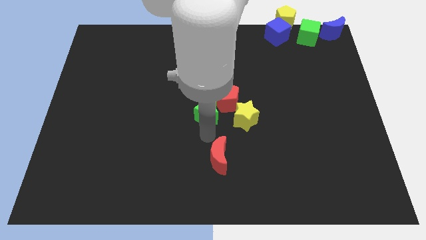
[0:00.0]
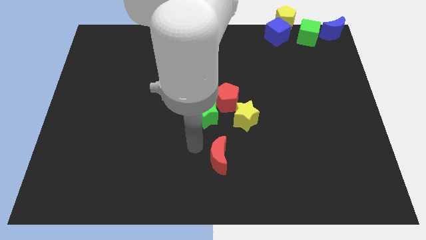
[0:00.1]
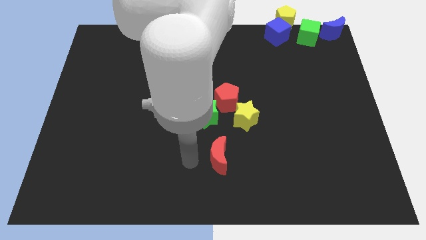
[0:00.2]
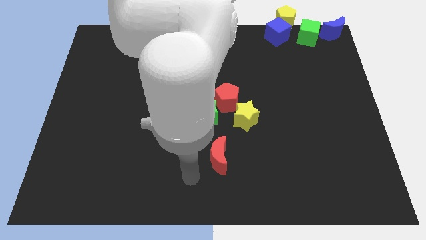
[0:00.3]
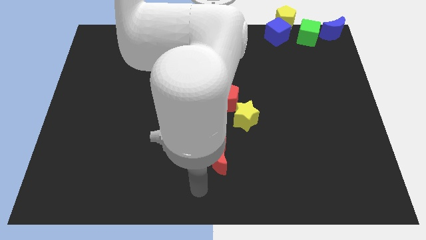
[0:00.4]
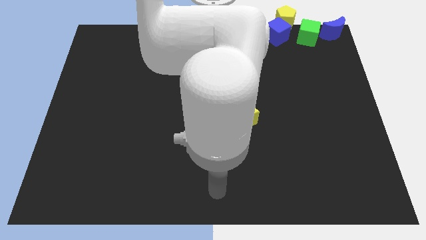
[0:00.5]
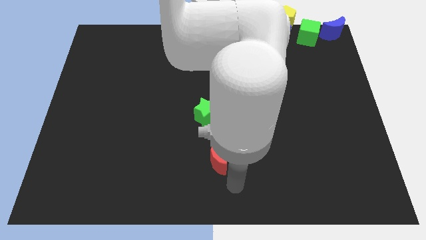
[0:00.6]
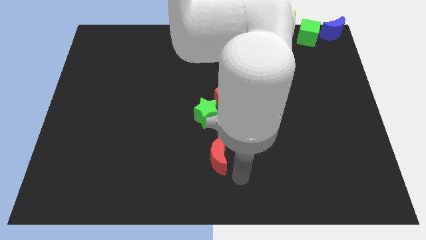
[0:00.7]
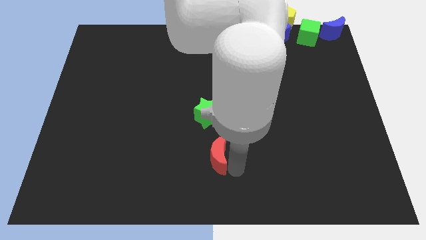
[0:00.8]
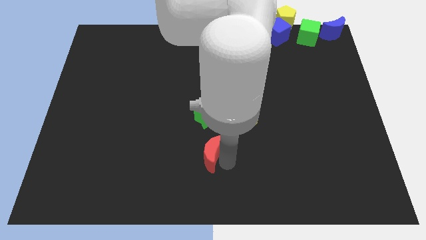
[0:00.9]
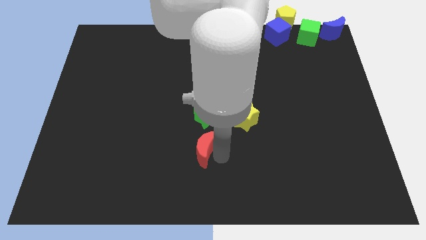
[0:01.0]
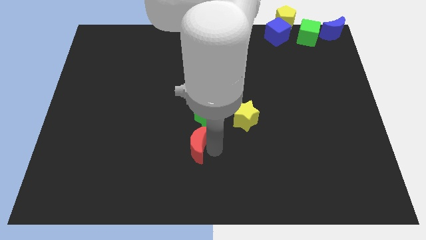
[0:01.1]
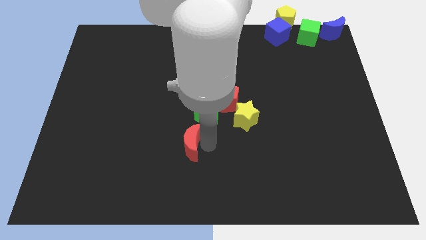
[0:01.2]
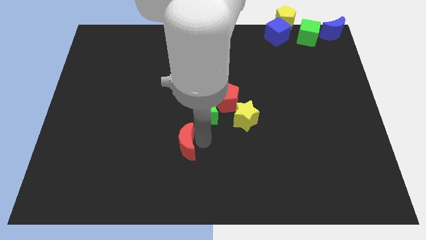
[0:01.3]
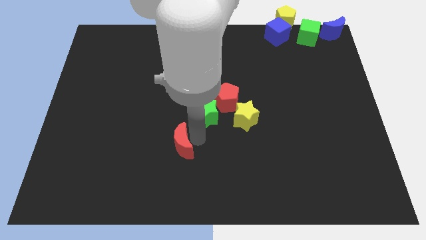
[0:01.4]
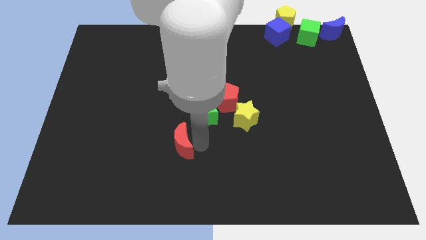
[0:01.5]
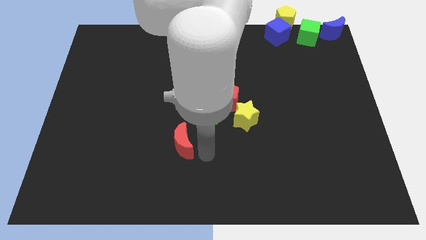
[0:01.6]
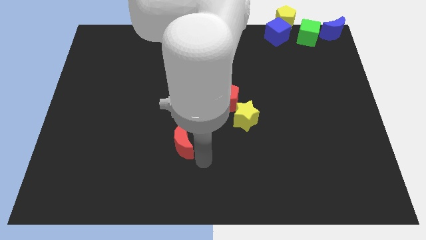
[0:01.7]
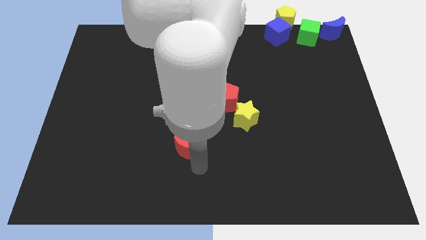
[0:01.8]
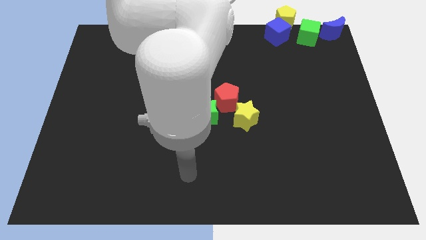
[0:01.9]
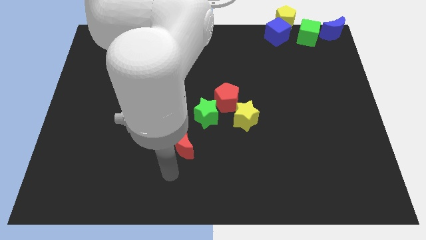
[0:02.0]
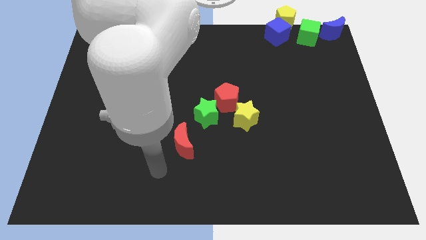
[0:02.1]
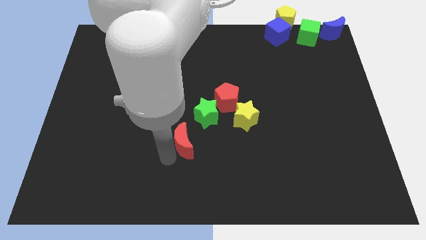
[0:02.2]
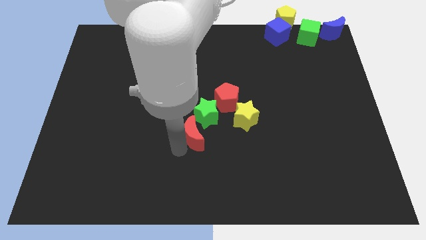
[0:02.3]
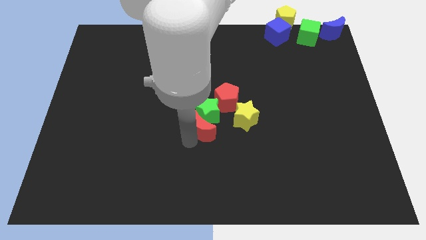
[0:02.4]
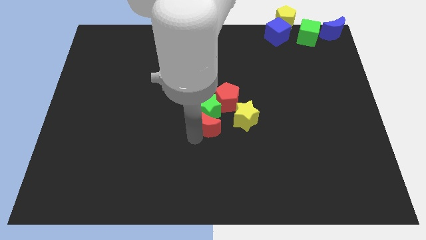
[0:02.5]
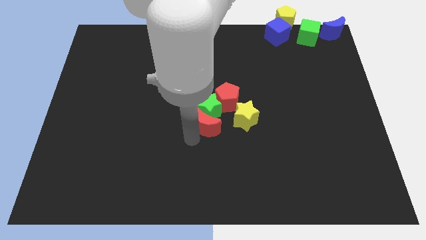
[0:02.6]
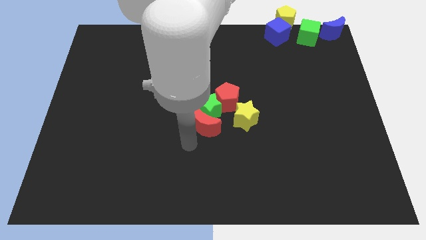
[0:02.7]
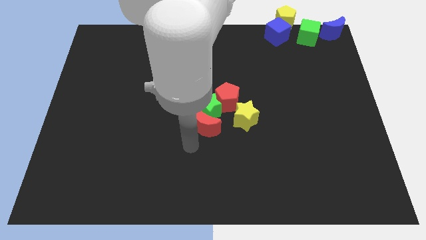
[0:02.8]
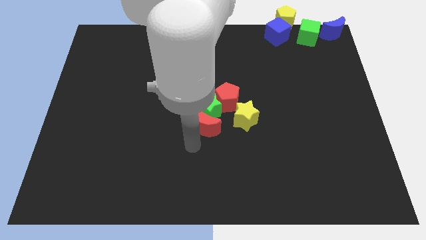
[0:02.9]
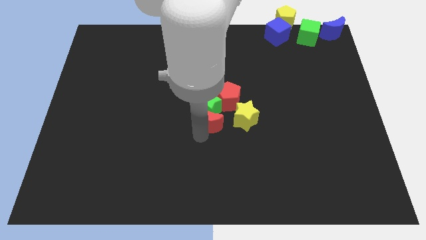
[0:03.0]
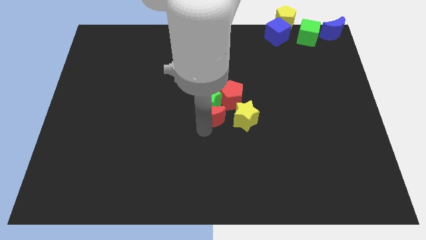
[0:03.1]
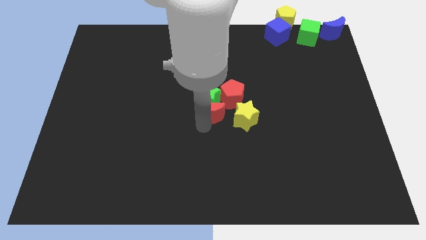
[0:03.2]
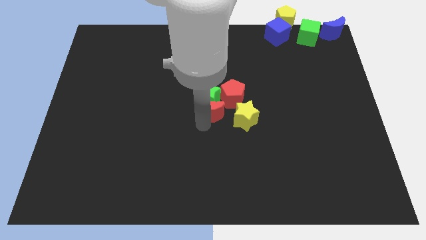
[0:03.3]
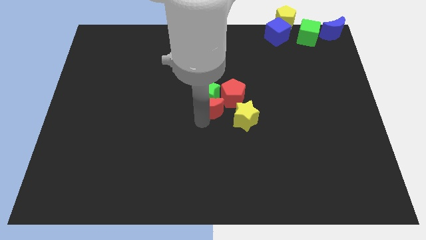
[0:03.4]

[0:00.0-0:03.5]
push the red moon into the green star

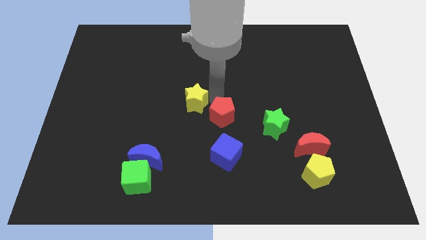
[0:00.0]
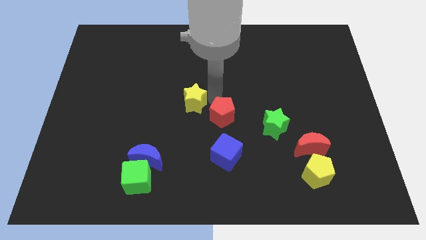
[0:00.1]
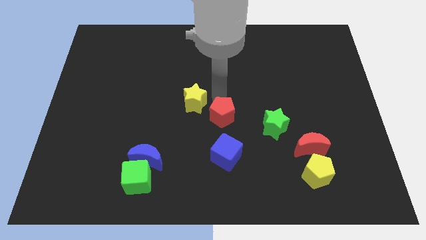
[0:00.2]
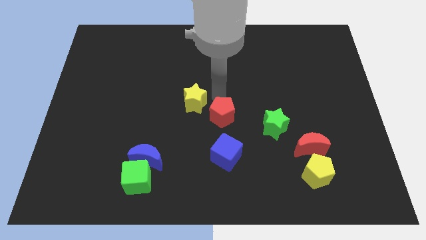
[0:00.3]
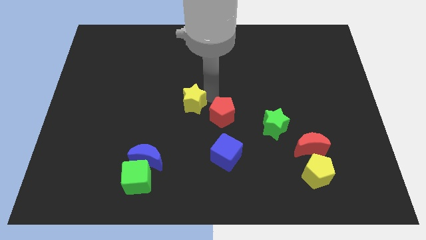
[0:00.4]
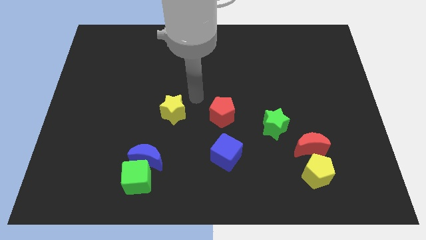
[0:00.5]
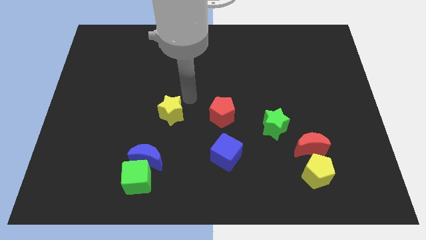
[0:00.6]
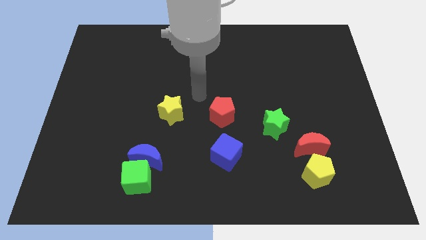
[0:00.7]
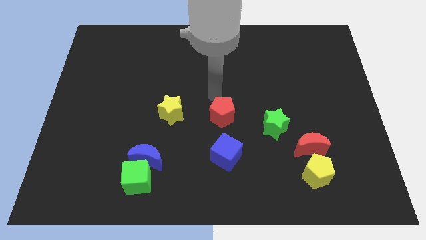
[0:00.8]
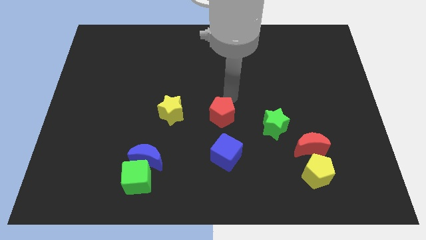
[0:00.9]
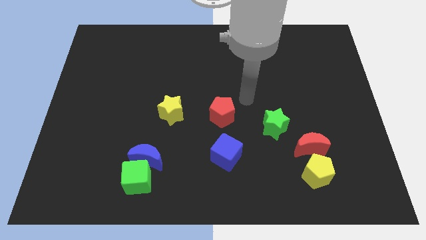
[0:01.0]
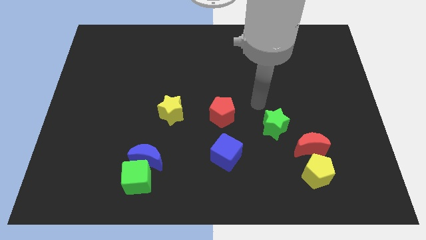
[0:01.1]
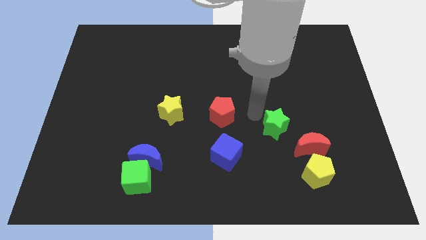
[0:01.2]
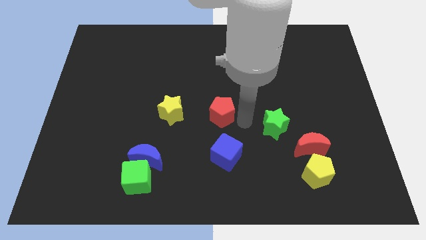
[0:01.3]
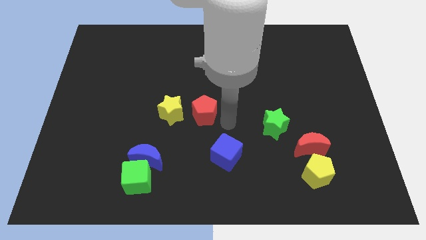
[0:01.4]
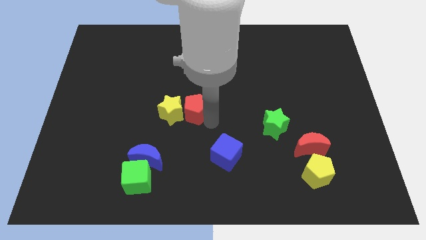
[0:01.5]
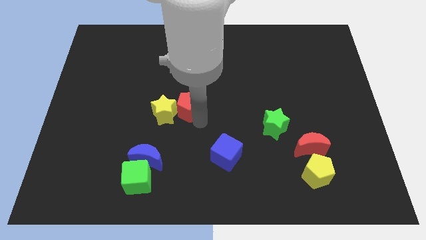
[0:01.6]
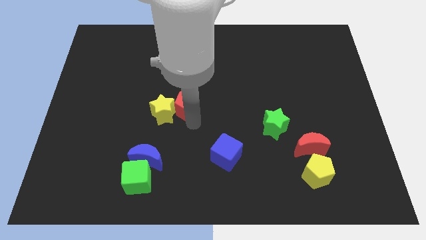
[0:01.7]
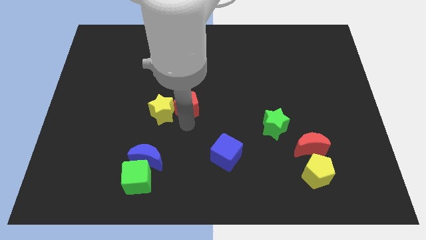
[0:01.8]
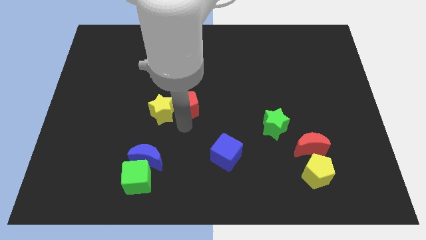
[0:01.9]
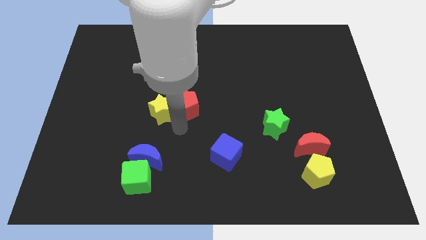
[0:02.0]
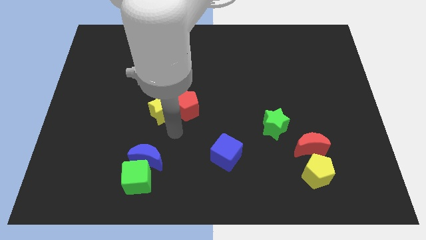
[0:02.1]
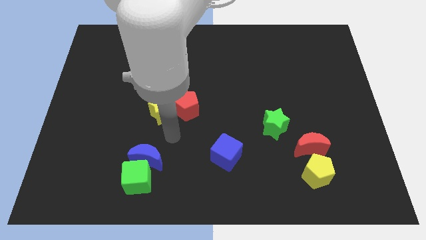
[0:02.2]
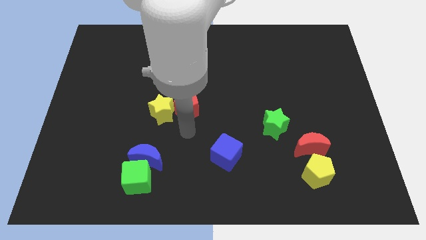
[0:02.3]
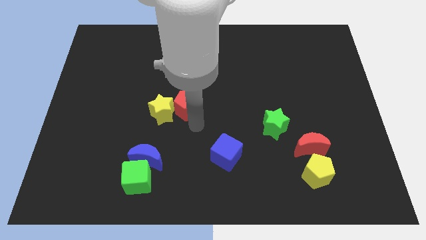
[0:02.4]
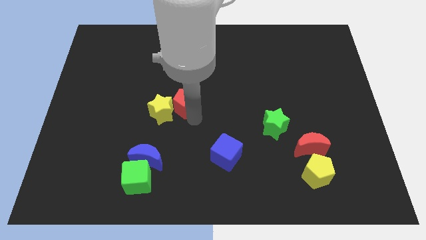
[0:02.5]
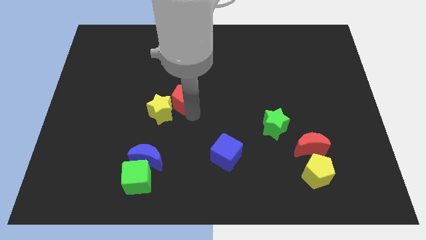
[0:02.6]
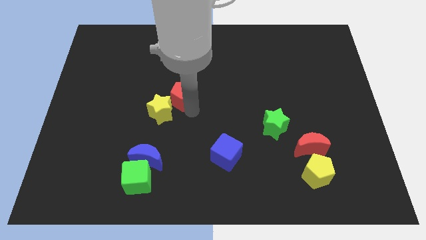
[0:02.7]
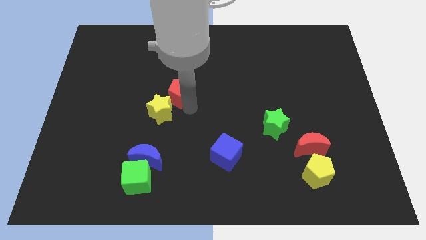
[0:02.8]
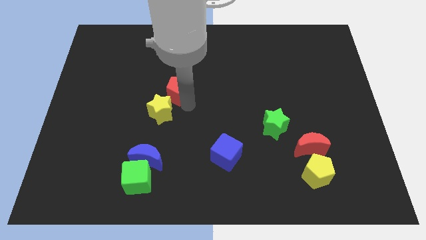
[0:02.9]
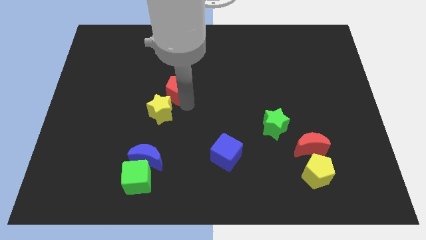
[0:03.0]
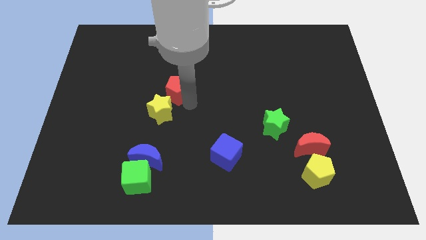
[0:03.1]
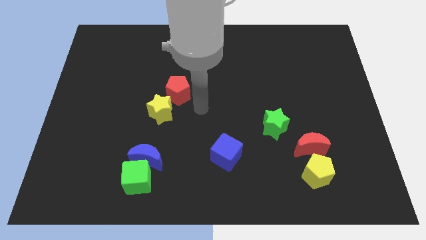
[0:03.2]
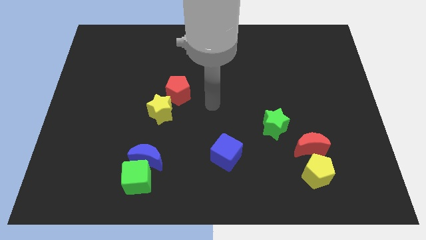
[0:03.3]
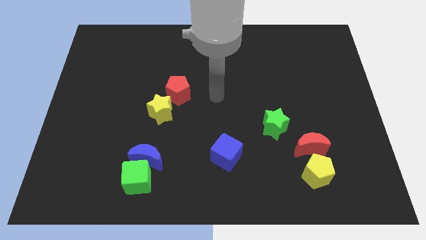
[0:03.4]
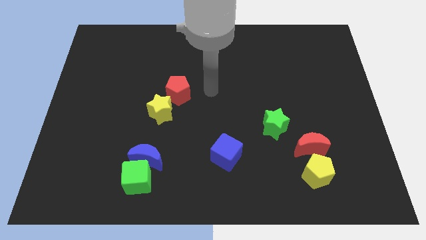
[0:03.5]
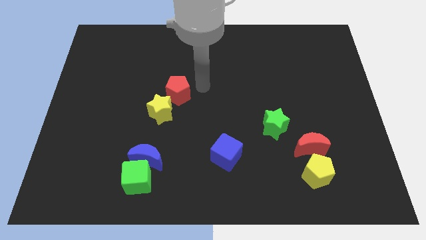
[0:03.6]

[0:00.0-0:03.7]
place red pentagon diagonally top right to the yellow star

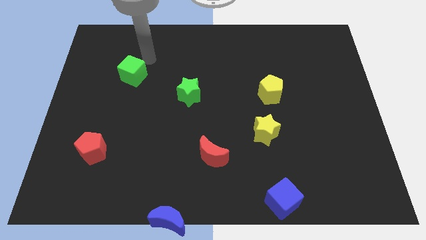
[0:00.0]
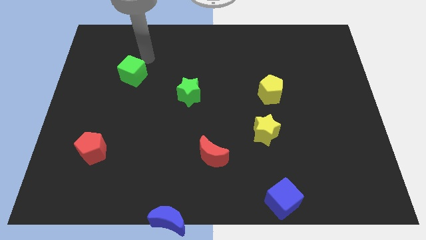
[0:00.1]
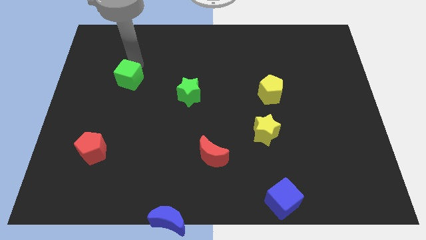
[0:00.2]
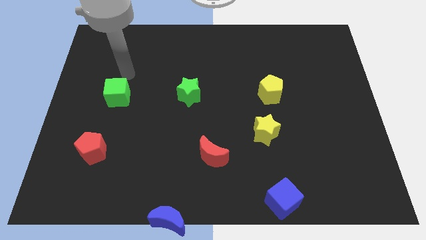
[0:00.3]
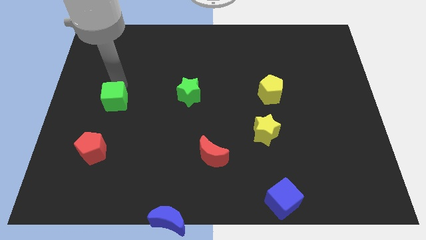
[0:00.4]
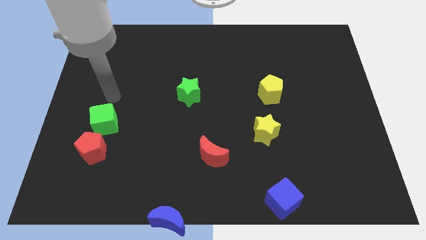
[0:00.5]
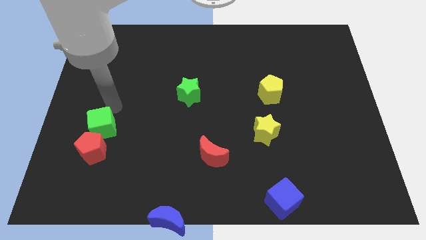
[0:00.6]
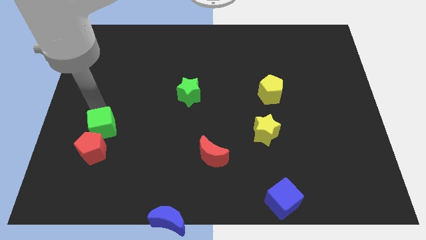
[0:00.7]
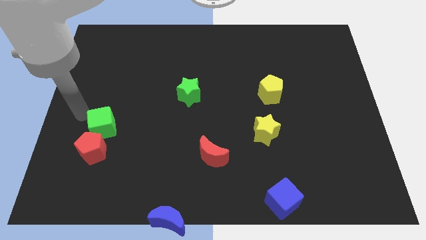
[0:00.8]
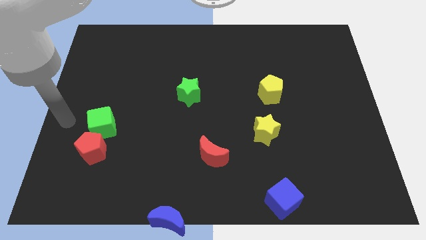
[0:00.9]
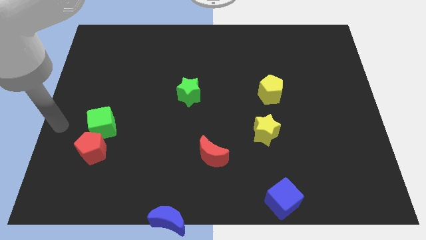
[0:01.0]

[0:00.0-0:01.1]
push the green cube closer to the red pentagon

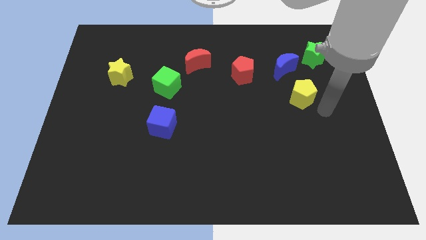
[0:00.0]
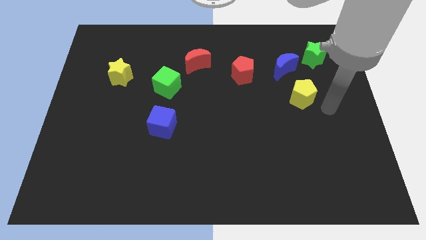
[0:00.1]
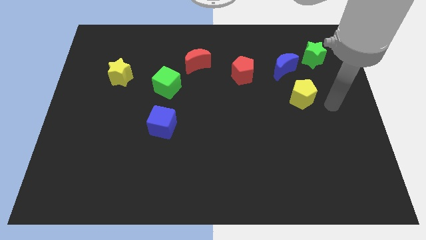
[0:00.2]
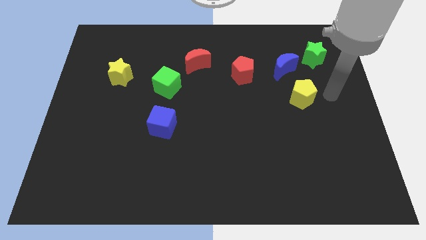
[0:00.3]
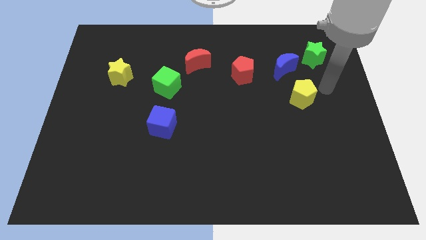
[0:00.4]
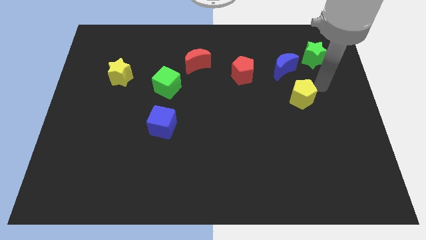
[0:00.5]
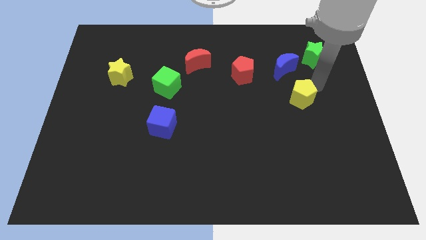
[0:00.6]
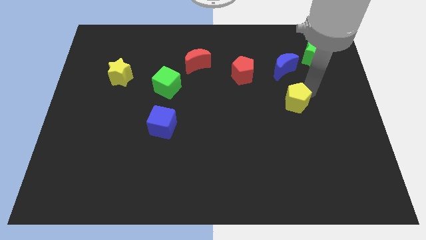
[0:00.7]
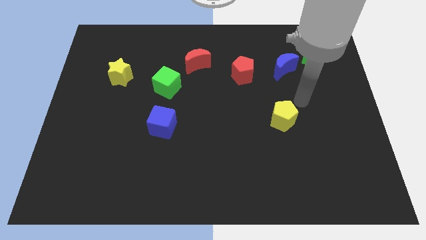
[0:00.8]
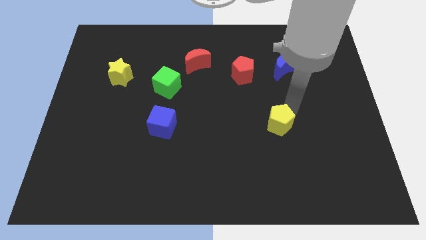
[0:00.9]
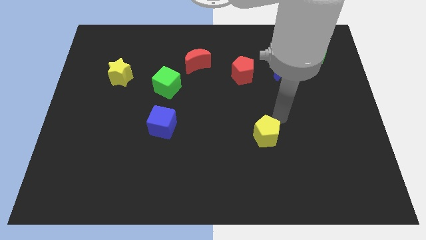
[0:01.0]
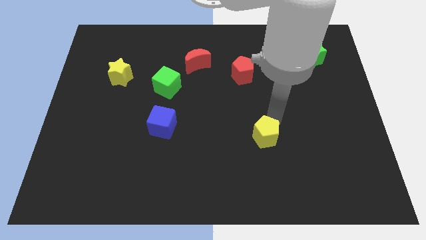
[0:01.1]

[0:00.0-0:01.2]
push the yellow pentagon slightly towards bottom side
